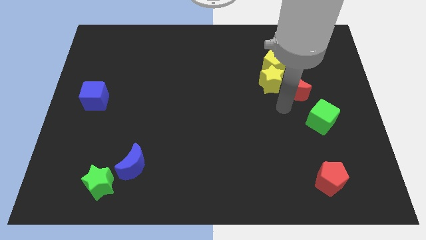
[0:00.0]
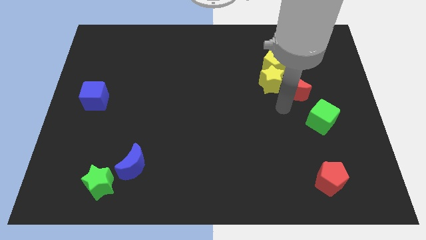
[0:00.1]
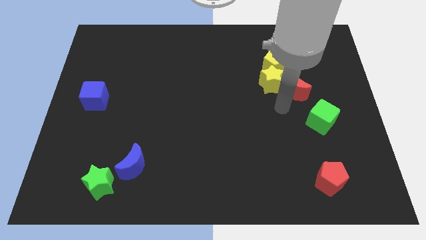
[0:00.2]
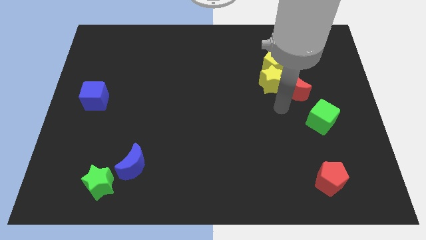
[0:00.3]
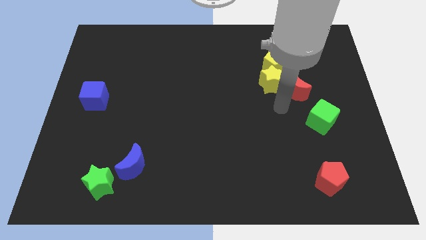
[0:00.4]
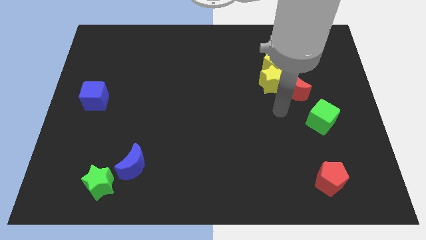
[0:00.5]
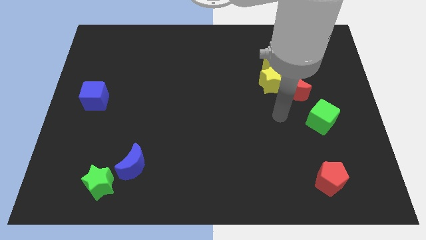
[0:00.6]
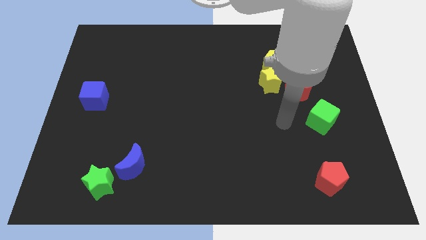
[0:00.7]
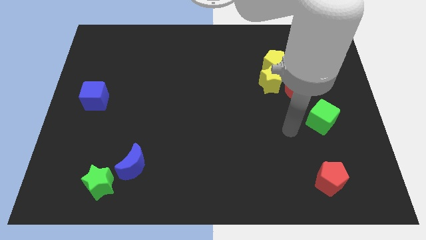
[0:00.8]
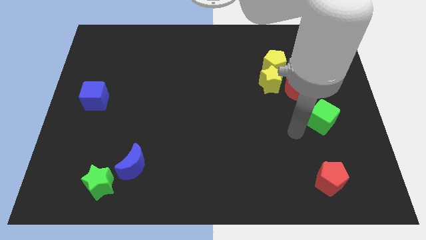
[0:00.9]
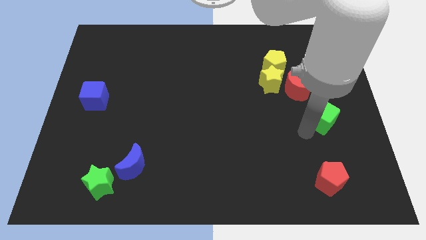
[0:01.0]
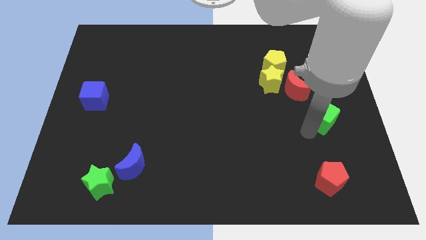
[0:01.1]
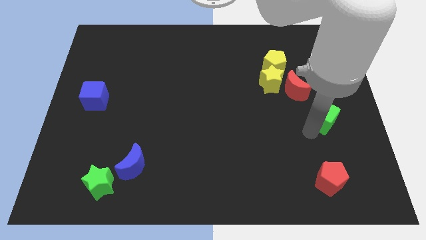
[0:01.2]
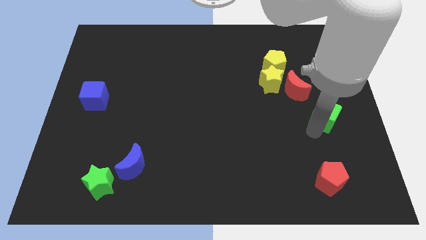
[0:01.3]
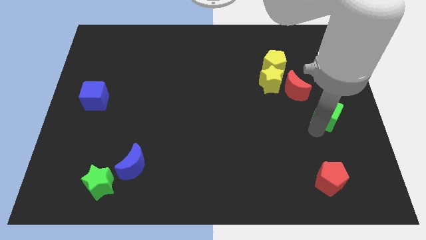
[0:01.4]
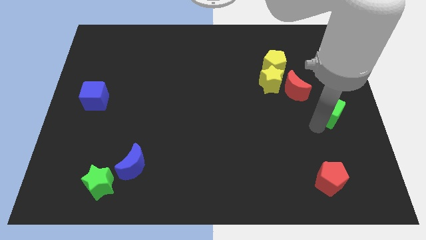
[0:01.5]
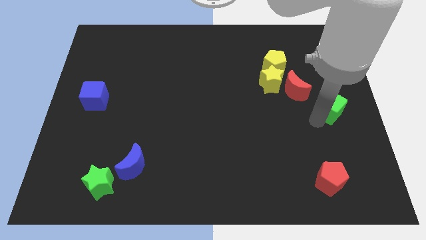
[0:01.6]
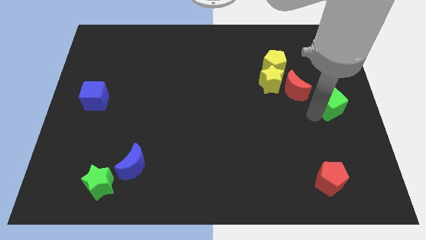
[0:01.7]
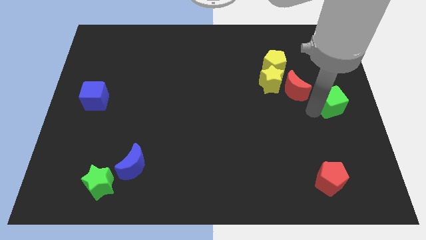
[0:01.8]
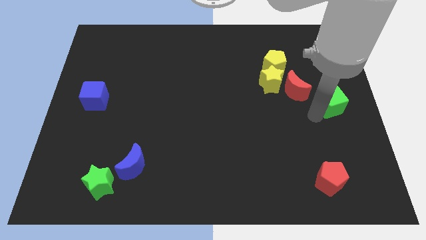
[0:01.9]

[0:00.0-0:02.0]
place green cube right to the red crescent

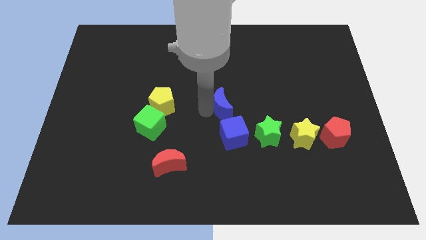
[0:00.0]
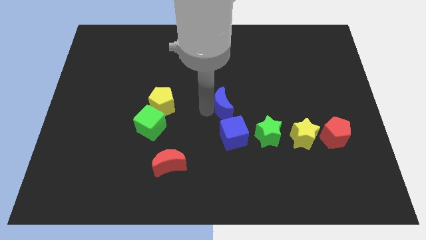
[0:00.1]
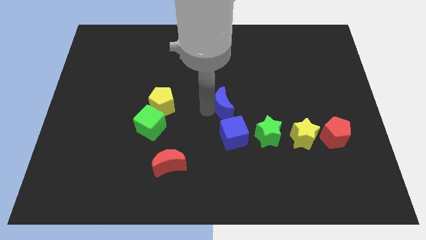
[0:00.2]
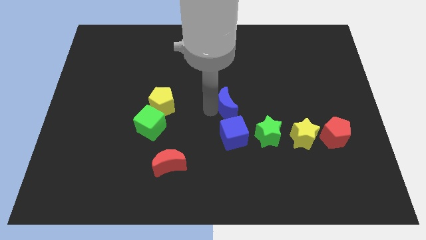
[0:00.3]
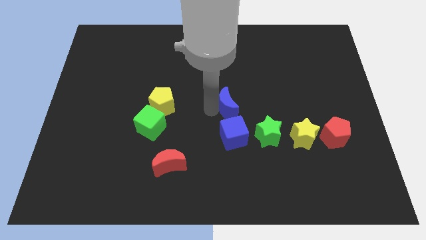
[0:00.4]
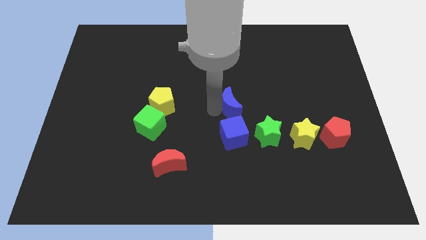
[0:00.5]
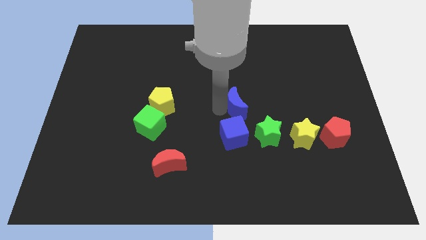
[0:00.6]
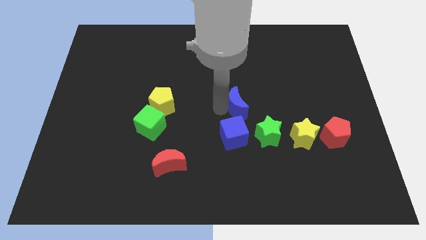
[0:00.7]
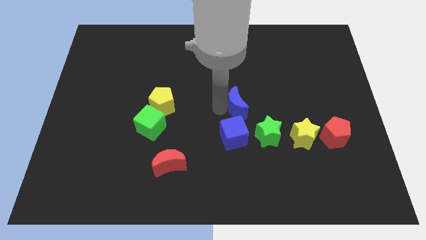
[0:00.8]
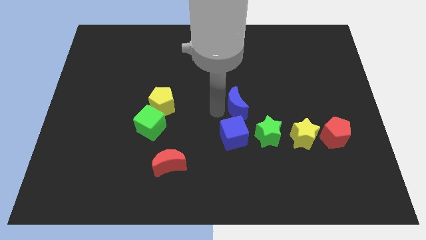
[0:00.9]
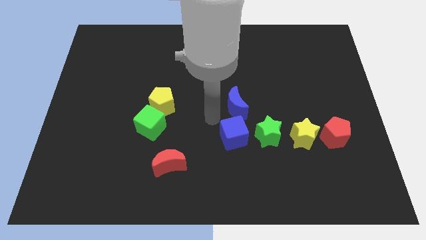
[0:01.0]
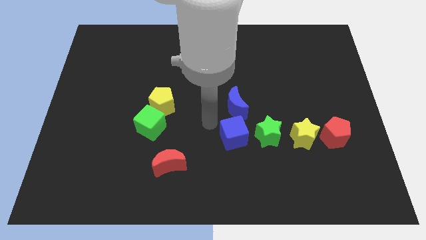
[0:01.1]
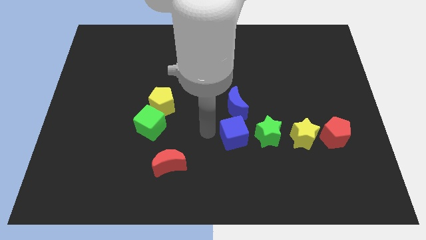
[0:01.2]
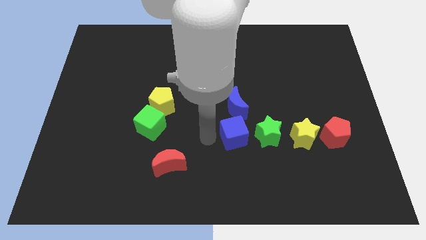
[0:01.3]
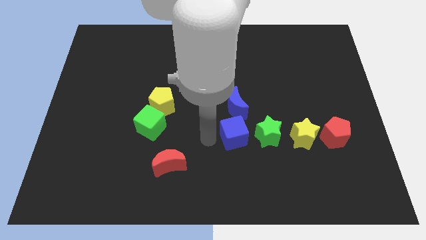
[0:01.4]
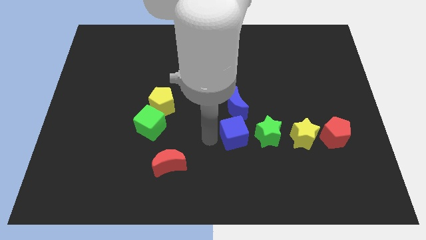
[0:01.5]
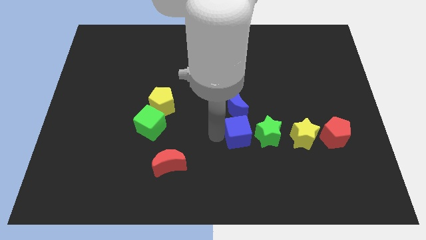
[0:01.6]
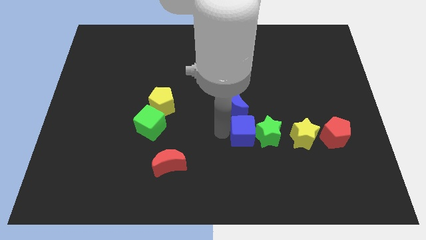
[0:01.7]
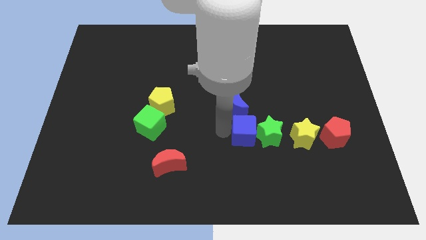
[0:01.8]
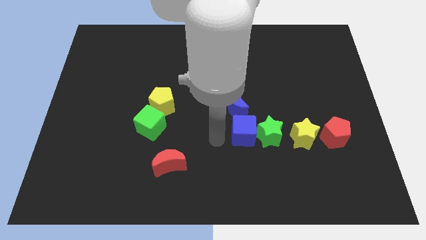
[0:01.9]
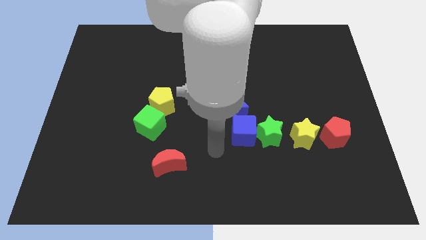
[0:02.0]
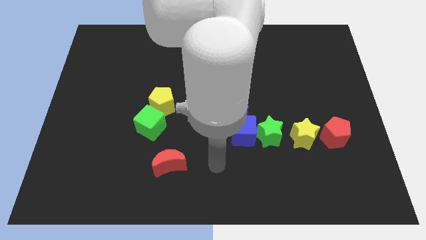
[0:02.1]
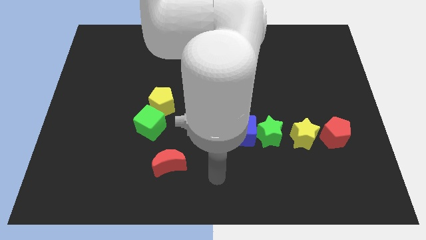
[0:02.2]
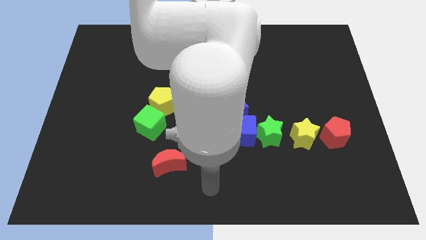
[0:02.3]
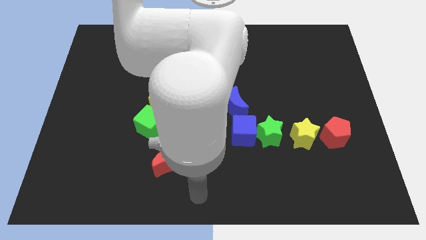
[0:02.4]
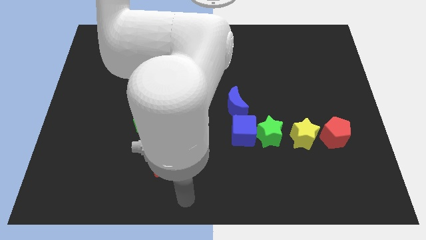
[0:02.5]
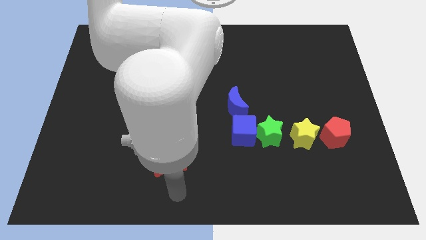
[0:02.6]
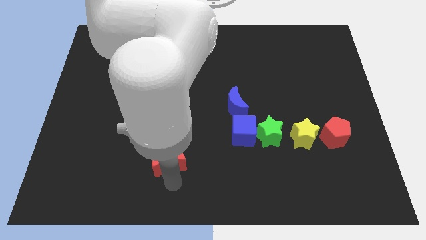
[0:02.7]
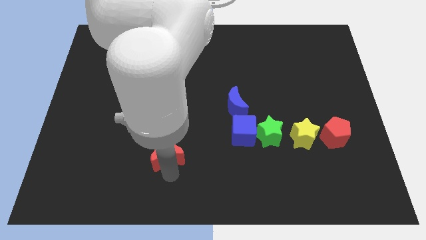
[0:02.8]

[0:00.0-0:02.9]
move the blue cube slightly to the right

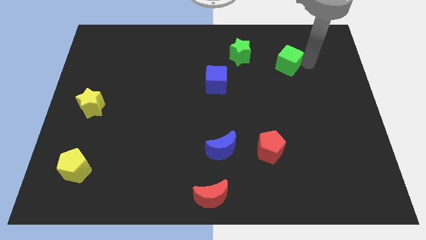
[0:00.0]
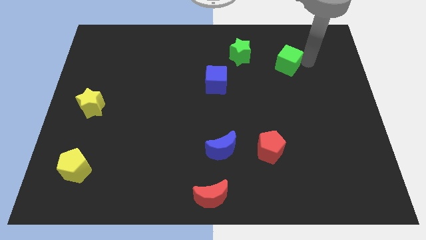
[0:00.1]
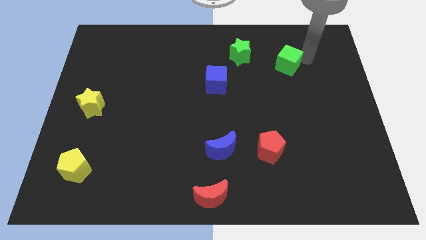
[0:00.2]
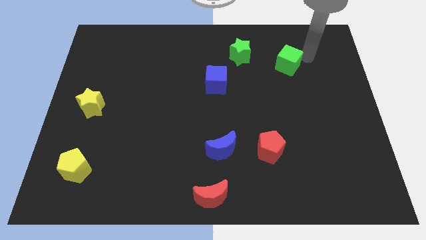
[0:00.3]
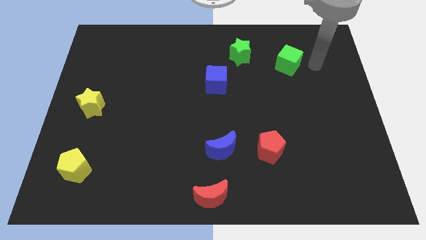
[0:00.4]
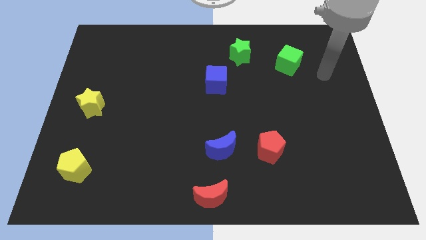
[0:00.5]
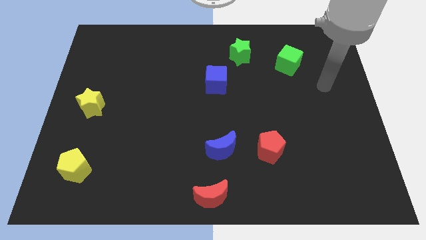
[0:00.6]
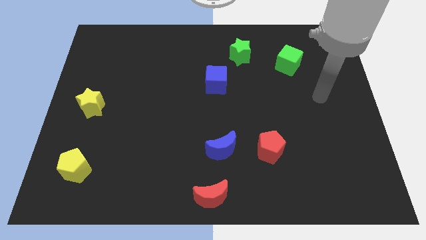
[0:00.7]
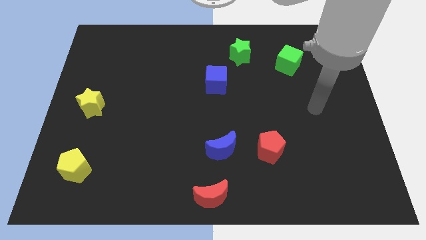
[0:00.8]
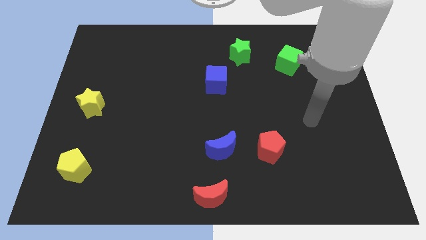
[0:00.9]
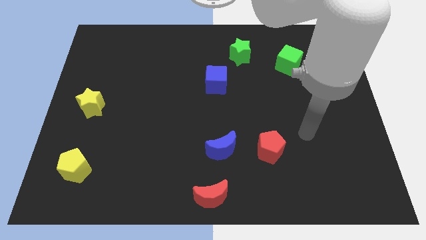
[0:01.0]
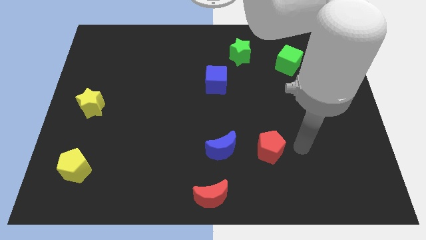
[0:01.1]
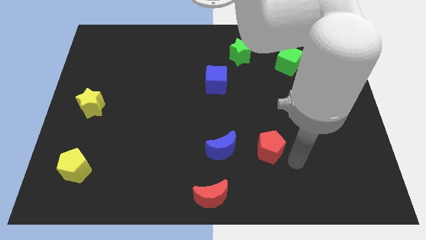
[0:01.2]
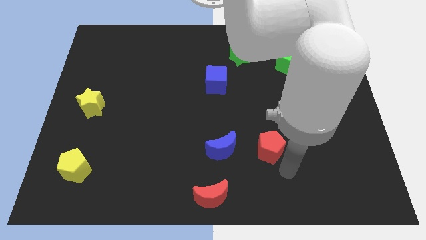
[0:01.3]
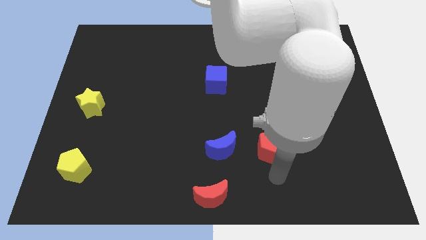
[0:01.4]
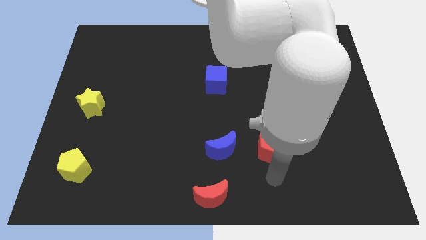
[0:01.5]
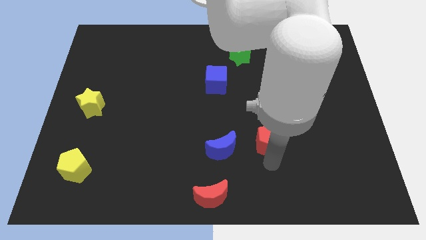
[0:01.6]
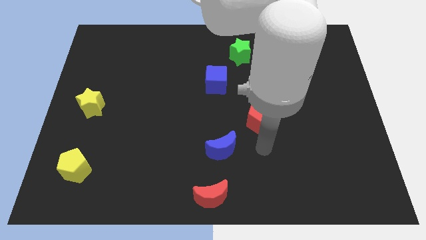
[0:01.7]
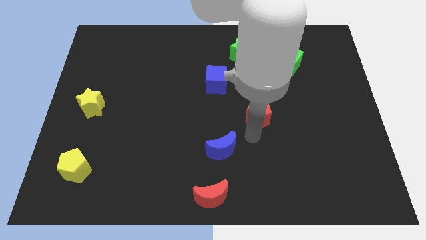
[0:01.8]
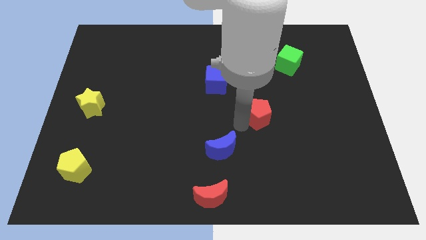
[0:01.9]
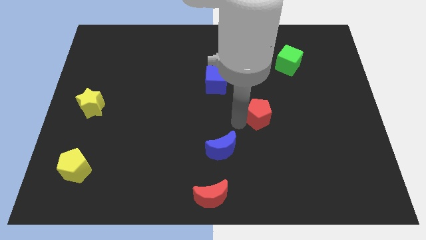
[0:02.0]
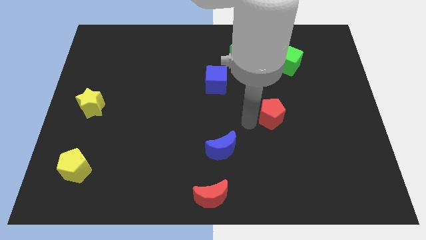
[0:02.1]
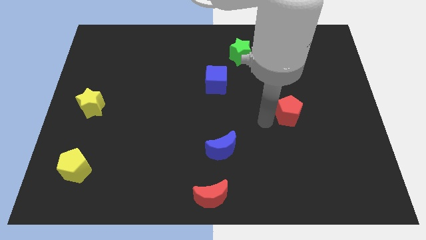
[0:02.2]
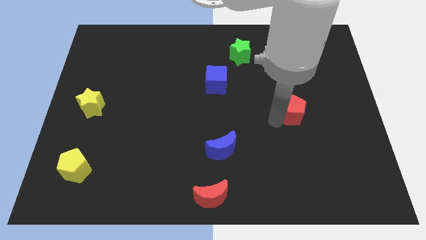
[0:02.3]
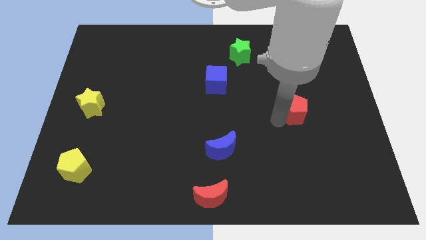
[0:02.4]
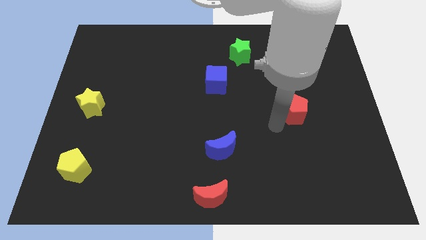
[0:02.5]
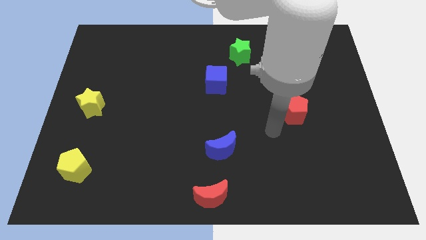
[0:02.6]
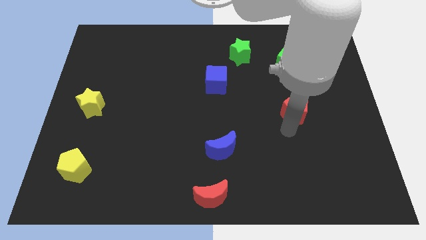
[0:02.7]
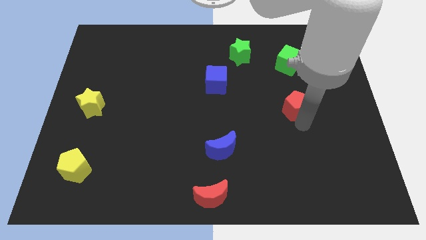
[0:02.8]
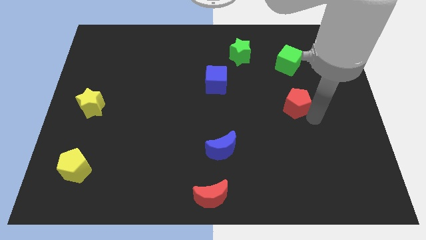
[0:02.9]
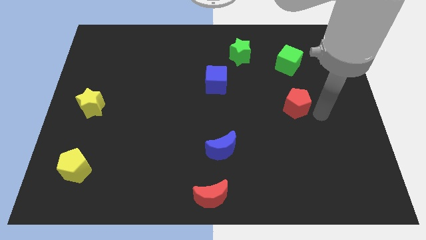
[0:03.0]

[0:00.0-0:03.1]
push the red pentagon below the green cube

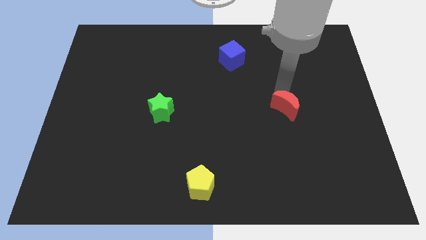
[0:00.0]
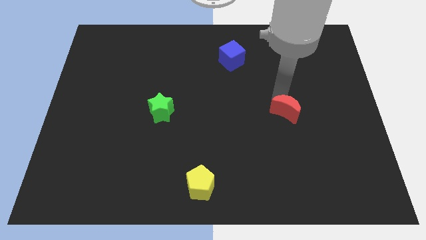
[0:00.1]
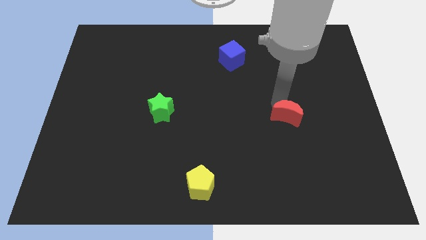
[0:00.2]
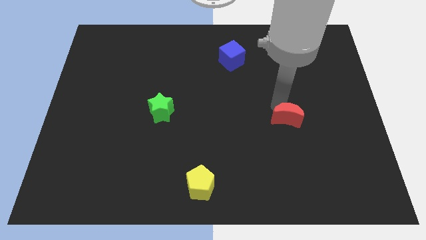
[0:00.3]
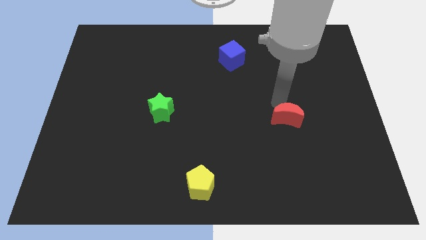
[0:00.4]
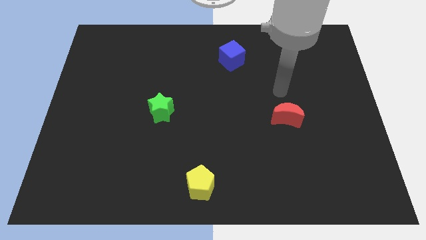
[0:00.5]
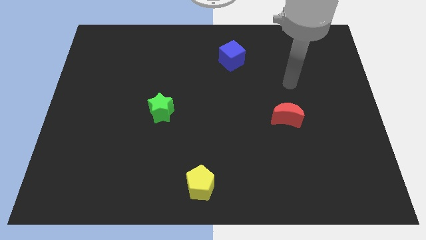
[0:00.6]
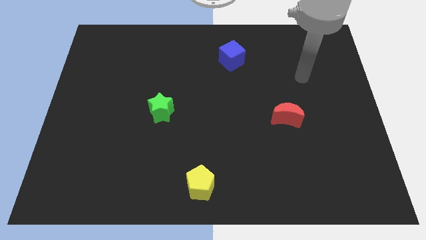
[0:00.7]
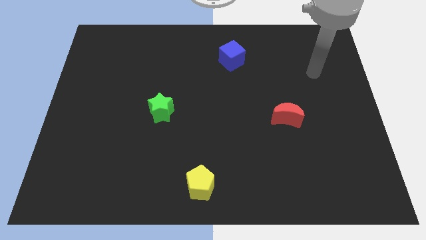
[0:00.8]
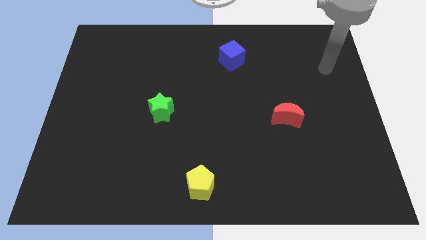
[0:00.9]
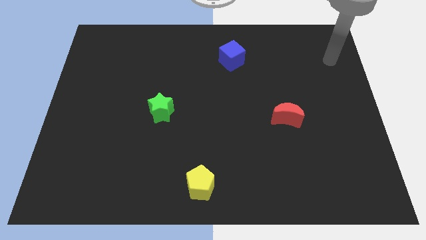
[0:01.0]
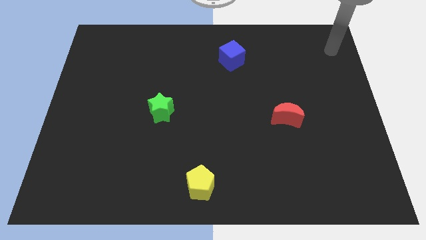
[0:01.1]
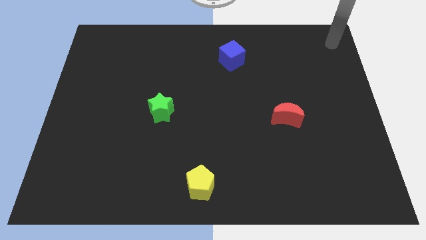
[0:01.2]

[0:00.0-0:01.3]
move your arm to the top right corner
